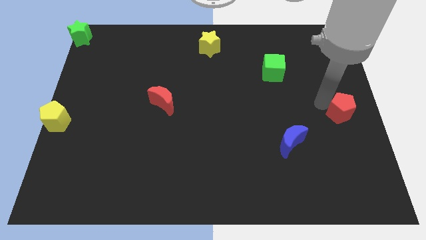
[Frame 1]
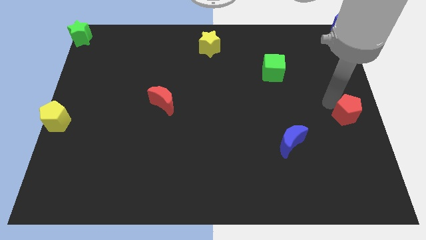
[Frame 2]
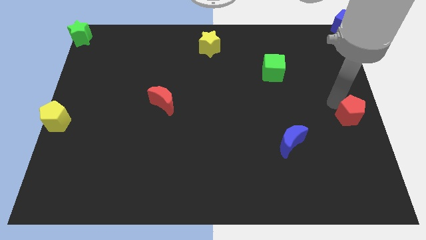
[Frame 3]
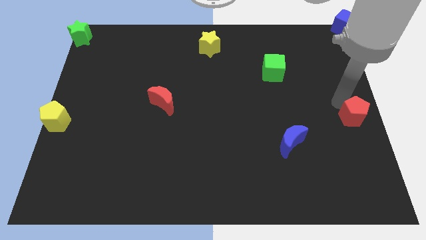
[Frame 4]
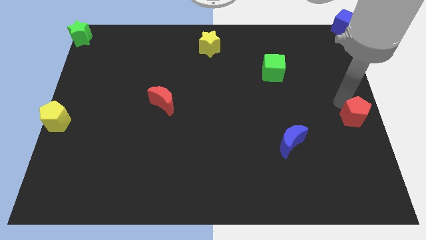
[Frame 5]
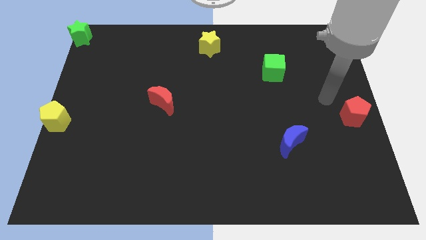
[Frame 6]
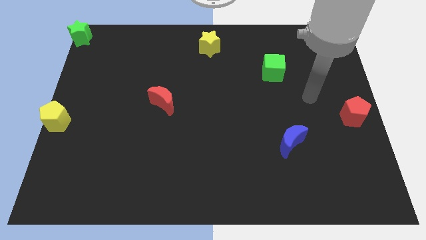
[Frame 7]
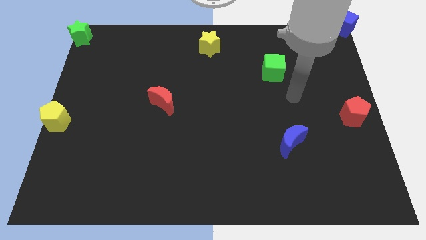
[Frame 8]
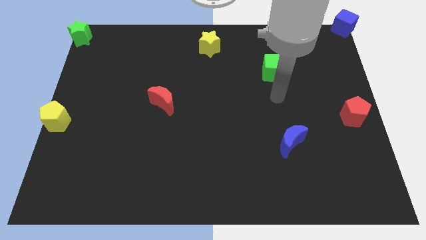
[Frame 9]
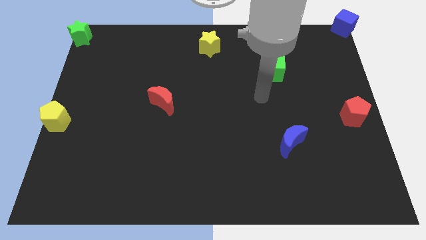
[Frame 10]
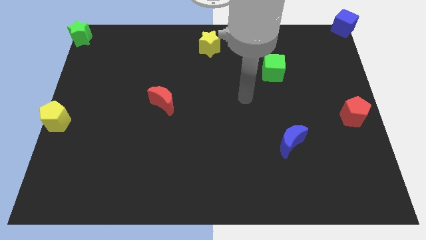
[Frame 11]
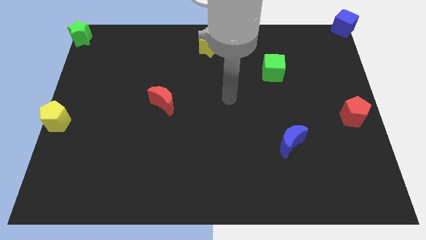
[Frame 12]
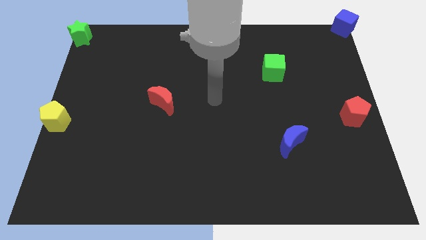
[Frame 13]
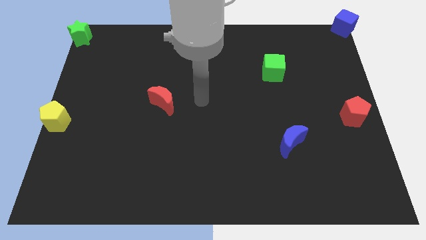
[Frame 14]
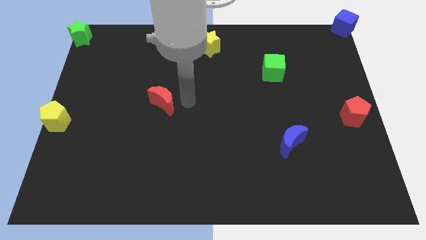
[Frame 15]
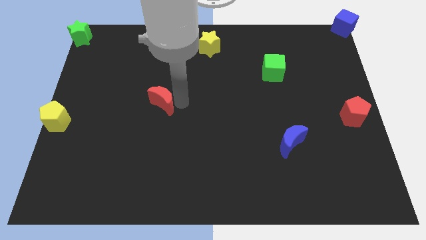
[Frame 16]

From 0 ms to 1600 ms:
push the red pentagon towards the right center of the board

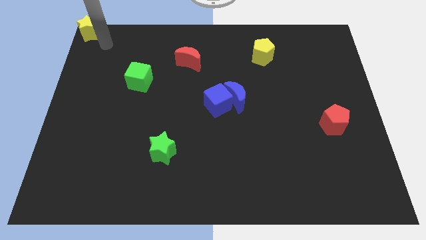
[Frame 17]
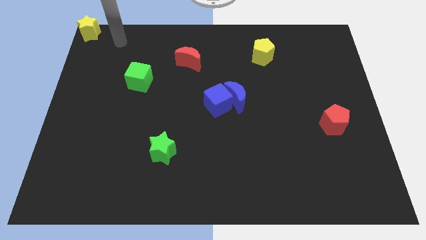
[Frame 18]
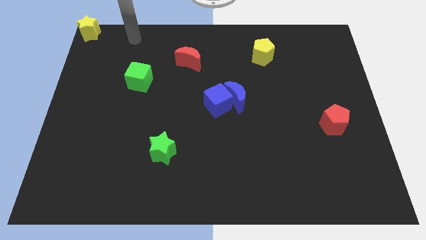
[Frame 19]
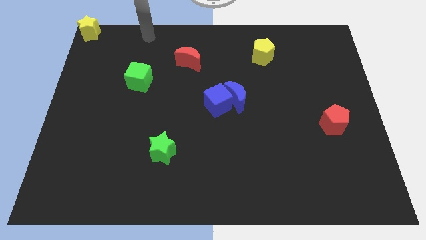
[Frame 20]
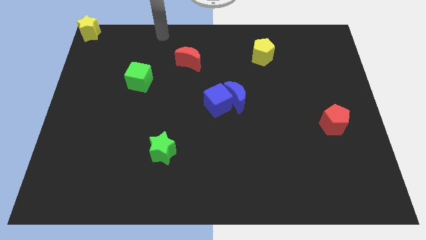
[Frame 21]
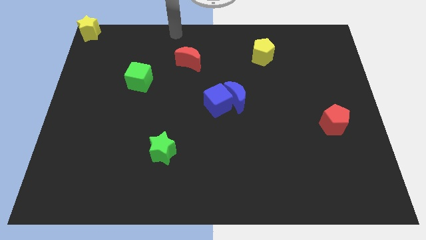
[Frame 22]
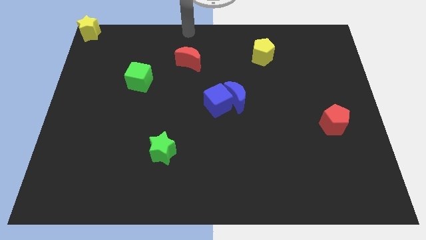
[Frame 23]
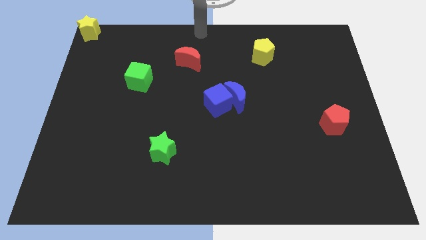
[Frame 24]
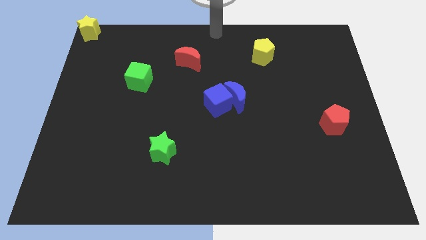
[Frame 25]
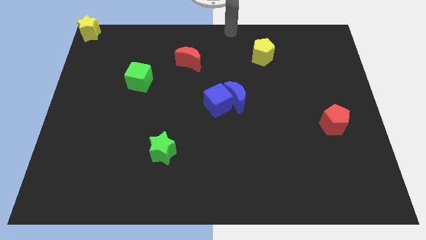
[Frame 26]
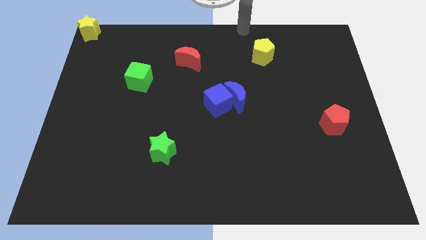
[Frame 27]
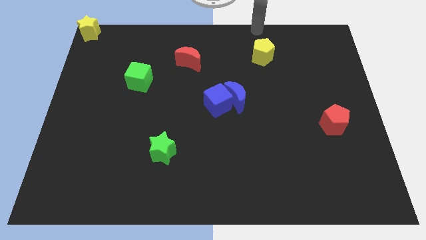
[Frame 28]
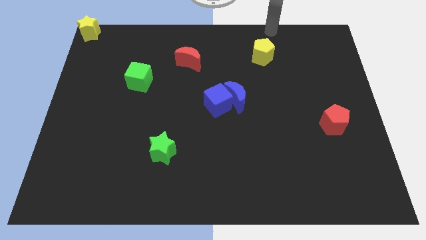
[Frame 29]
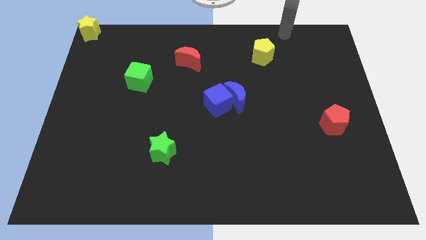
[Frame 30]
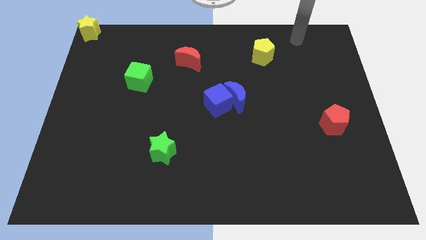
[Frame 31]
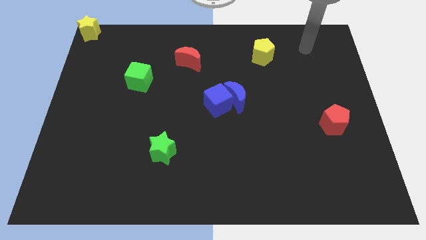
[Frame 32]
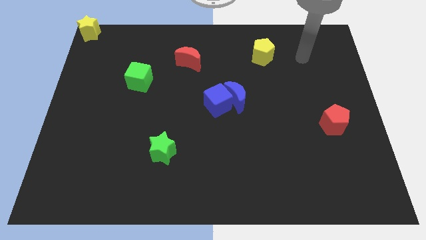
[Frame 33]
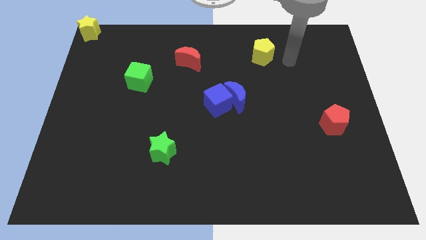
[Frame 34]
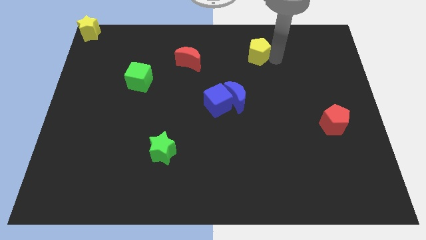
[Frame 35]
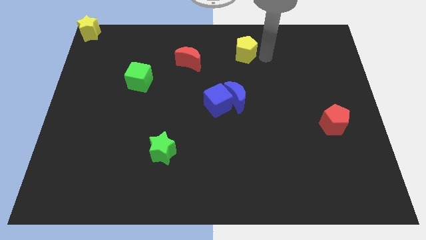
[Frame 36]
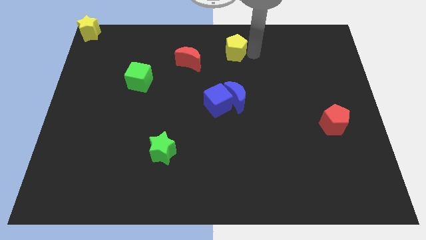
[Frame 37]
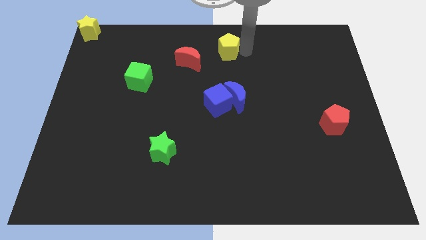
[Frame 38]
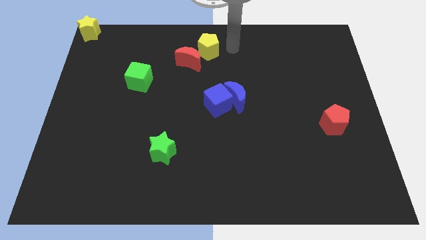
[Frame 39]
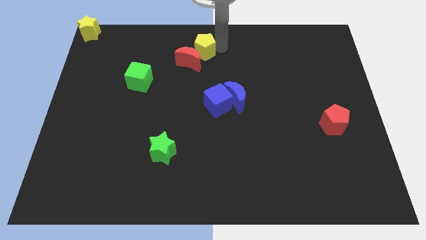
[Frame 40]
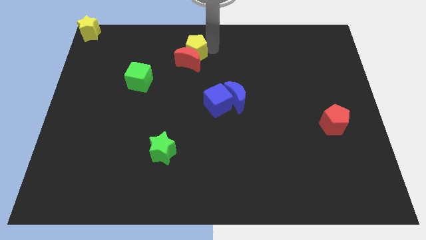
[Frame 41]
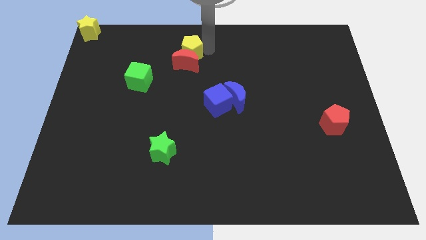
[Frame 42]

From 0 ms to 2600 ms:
place yellow pentagon to the top of the red moon

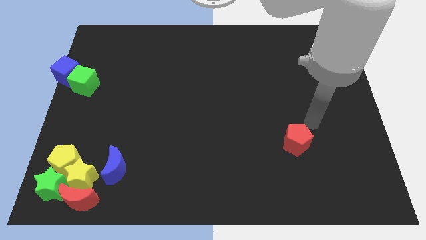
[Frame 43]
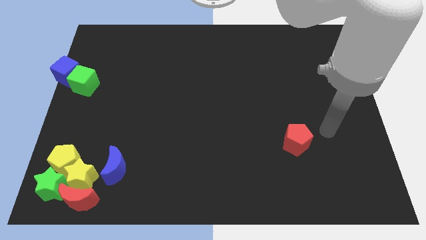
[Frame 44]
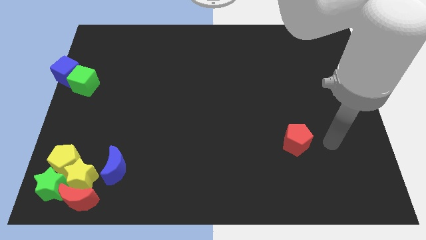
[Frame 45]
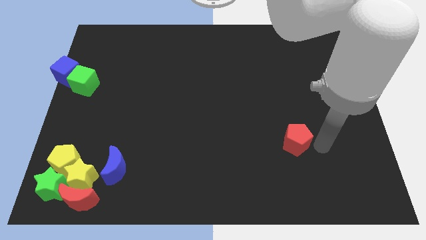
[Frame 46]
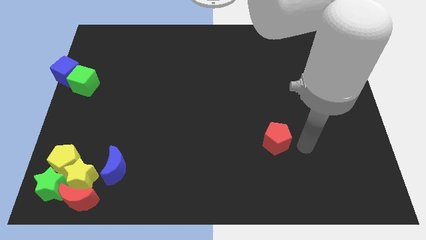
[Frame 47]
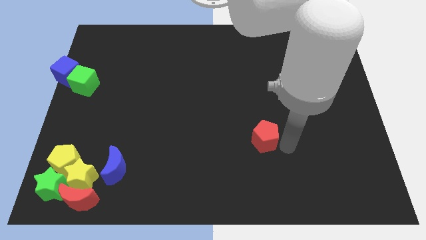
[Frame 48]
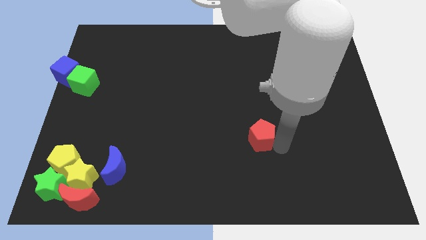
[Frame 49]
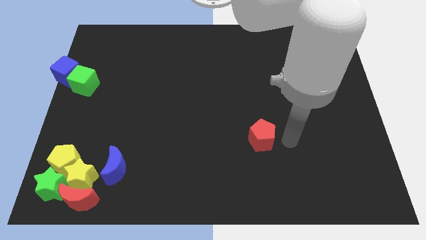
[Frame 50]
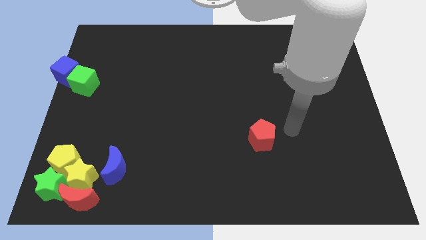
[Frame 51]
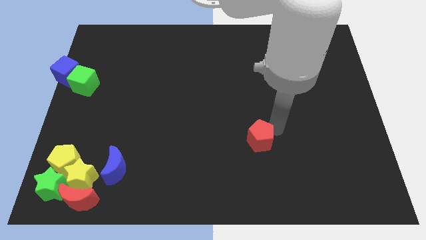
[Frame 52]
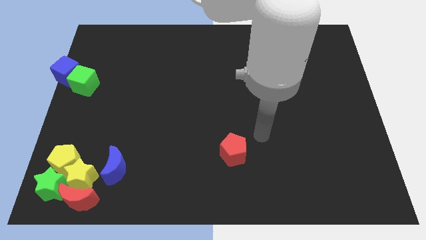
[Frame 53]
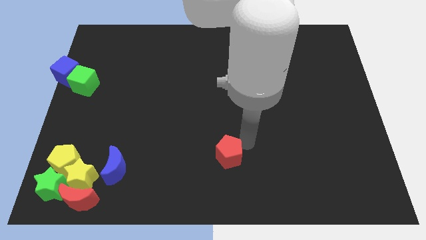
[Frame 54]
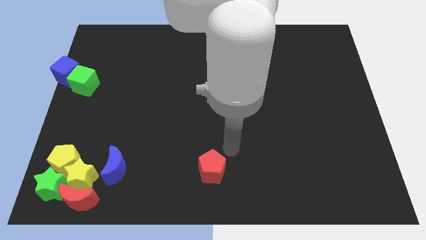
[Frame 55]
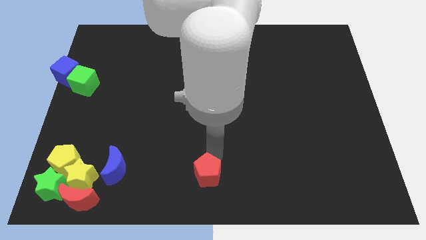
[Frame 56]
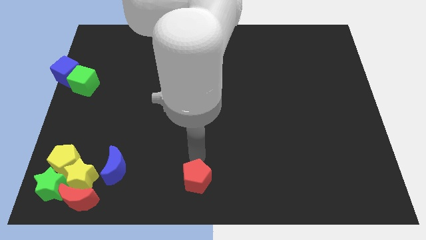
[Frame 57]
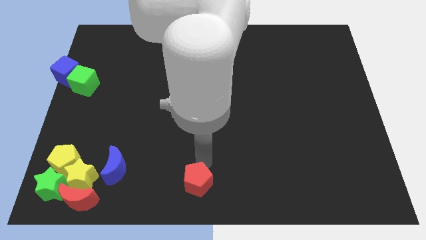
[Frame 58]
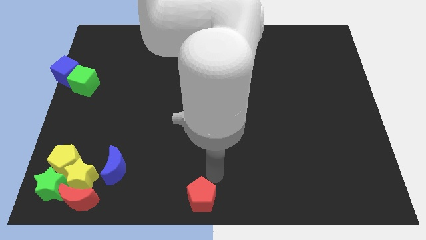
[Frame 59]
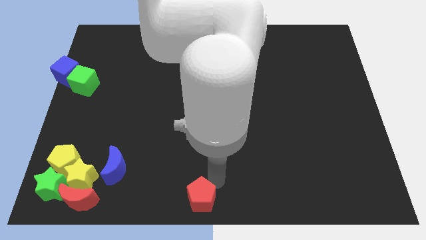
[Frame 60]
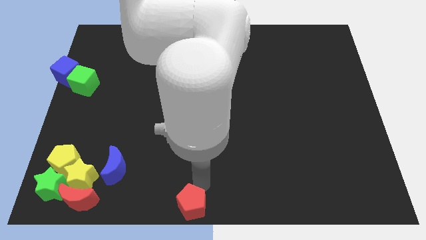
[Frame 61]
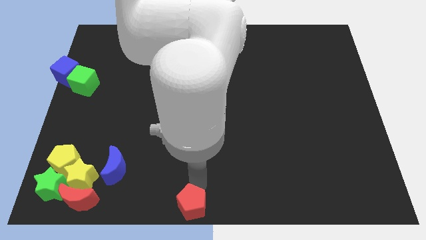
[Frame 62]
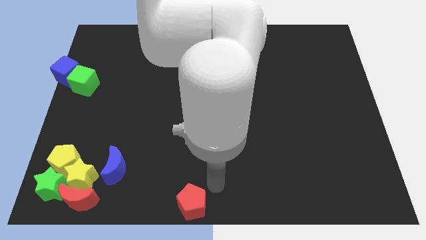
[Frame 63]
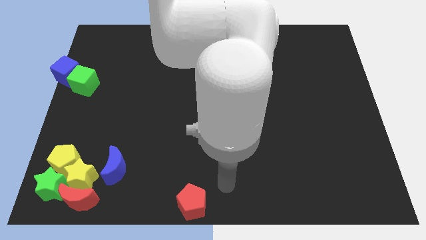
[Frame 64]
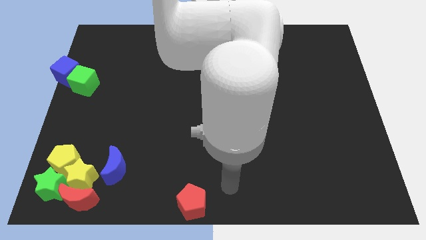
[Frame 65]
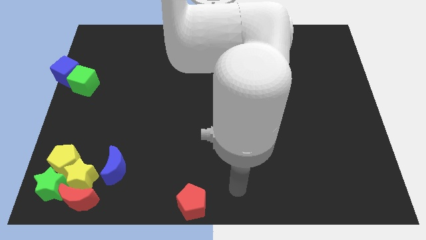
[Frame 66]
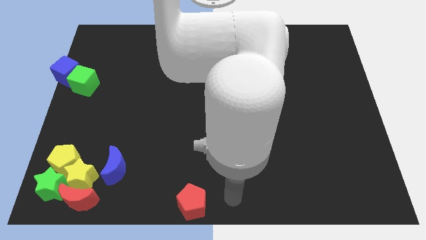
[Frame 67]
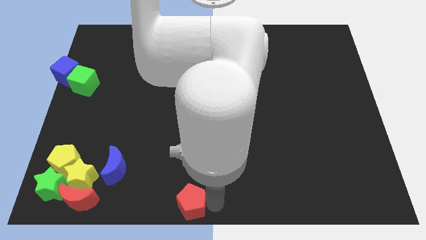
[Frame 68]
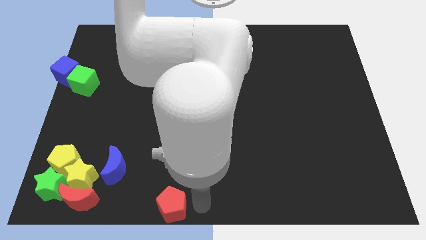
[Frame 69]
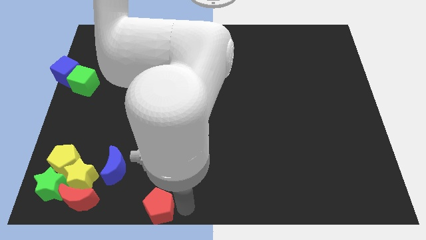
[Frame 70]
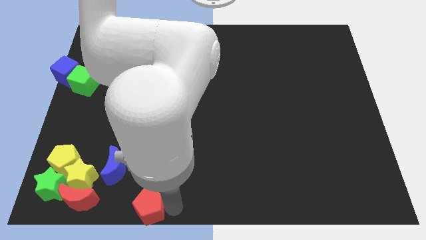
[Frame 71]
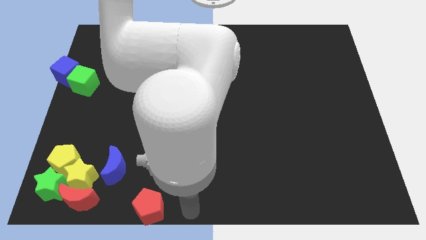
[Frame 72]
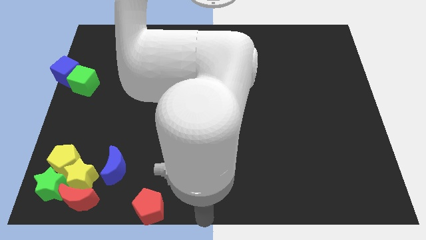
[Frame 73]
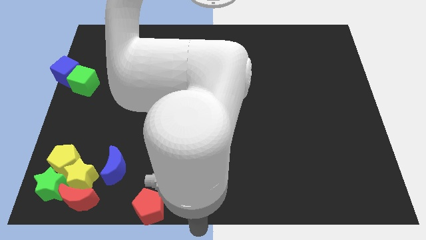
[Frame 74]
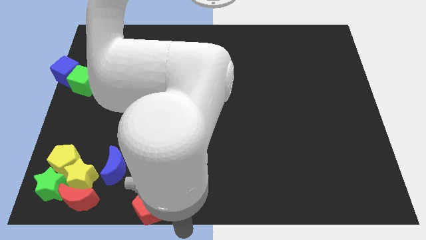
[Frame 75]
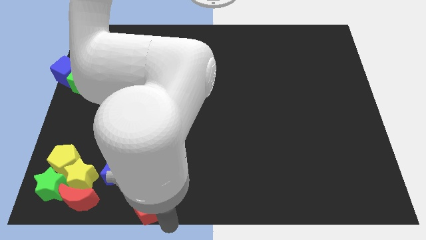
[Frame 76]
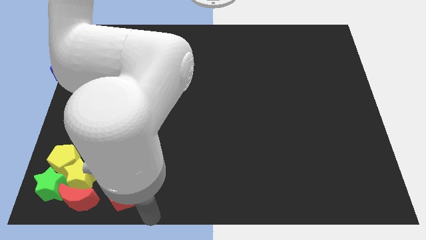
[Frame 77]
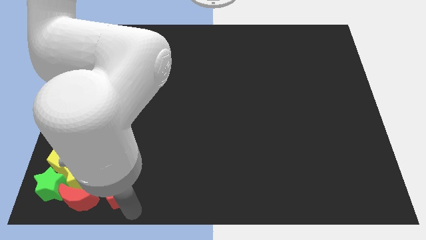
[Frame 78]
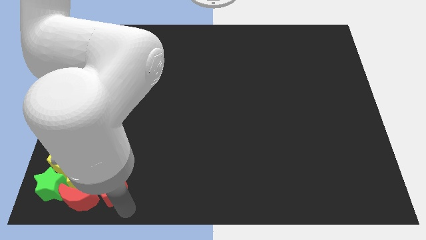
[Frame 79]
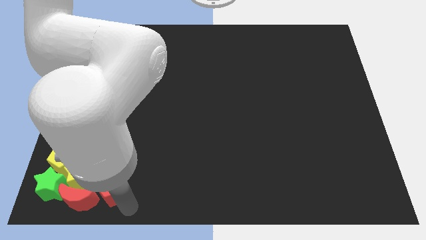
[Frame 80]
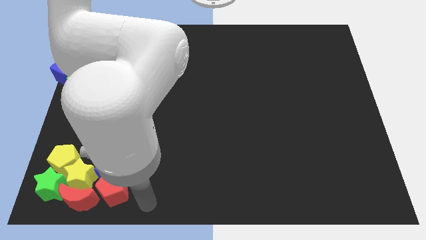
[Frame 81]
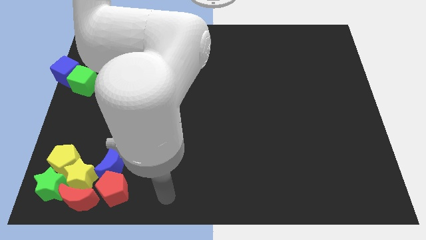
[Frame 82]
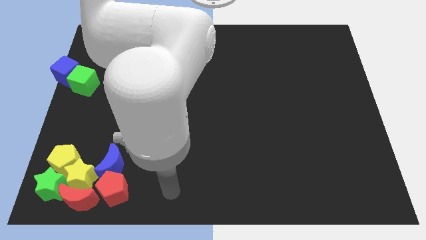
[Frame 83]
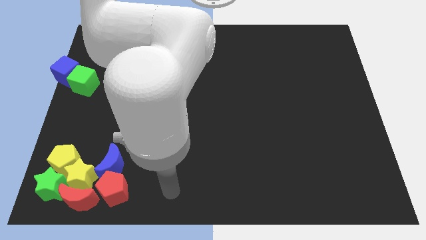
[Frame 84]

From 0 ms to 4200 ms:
drag the red pentagon into the group of blocks

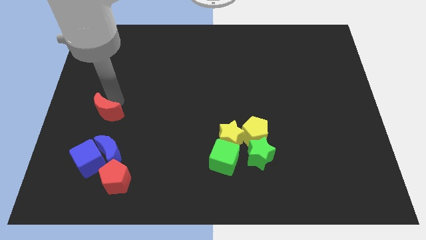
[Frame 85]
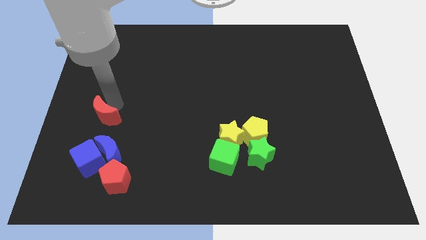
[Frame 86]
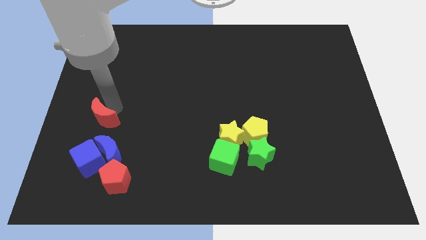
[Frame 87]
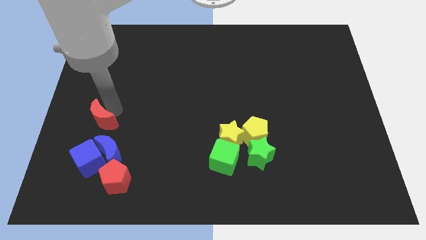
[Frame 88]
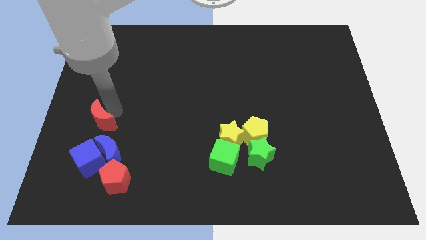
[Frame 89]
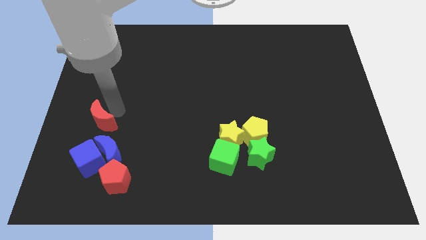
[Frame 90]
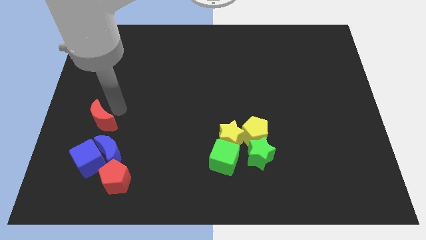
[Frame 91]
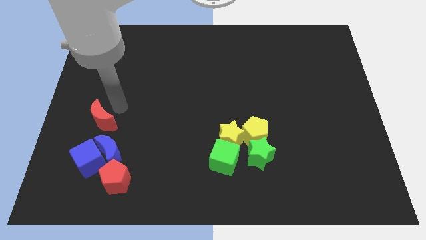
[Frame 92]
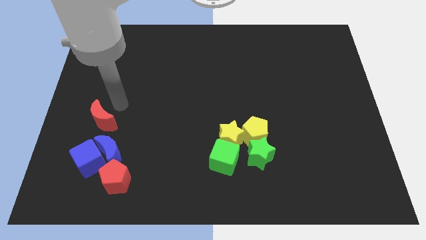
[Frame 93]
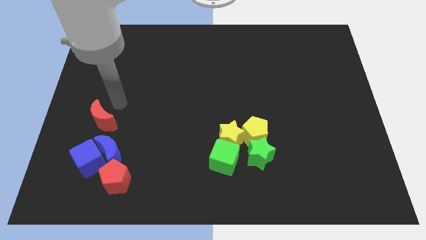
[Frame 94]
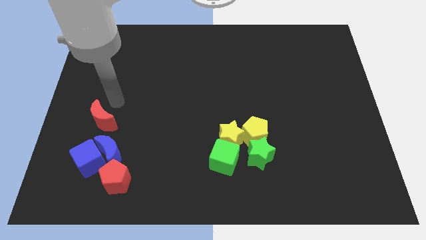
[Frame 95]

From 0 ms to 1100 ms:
place the red crescent above the blue blocks
